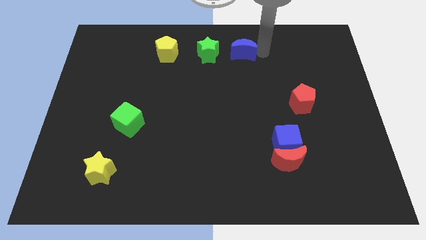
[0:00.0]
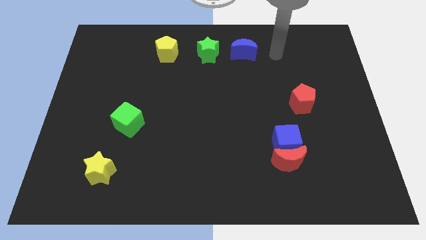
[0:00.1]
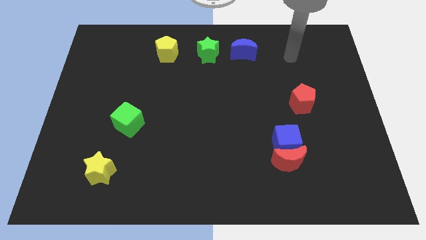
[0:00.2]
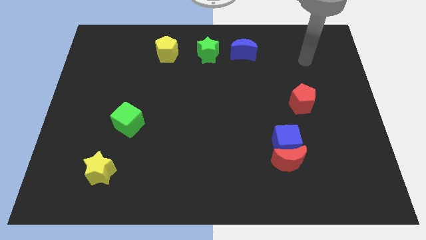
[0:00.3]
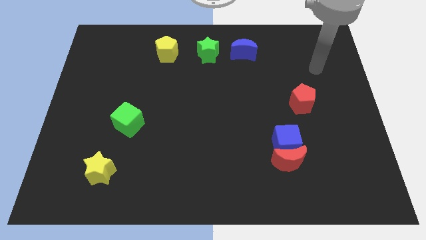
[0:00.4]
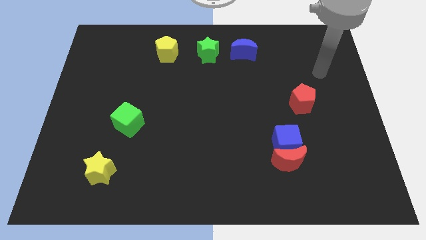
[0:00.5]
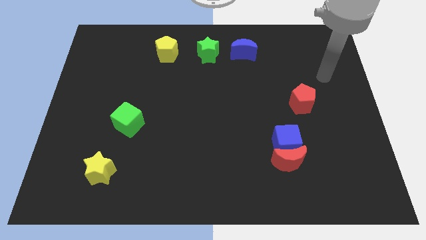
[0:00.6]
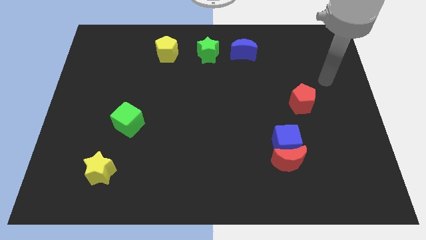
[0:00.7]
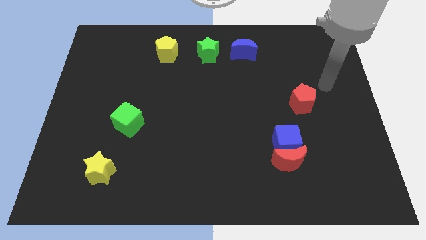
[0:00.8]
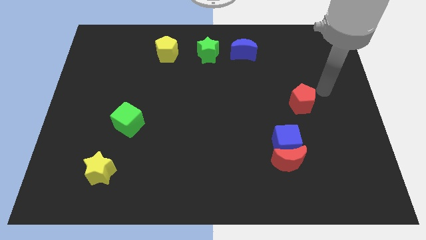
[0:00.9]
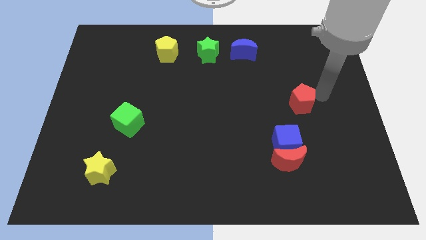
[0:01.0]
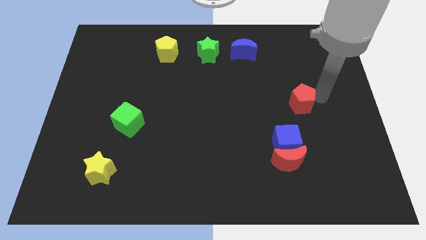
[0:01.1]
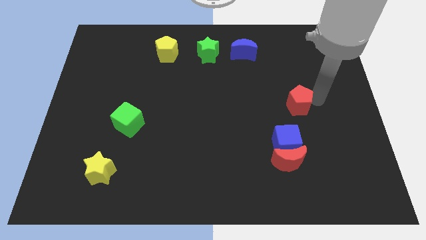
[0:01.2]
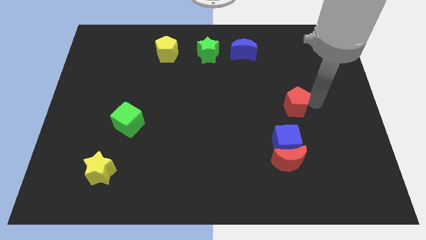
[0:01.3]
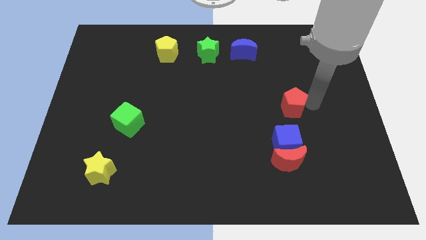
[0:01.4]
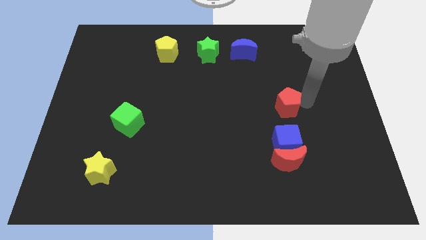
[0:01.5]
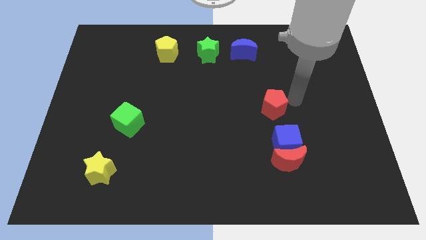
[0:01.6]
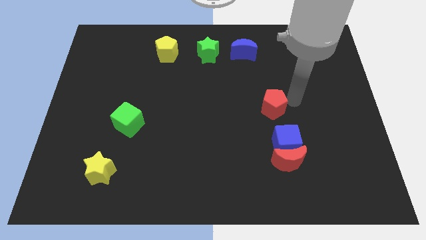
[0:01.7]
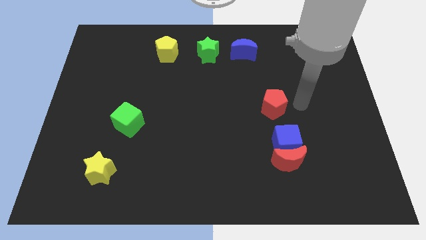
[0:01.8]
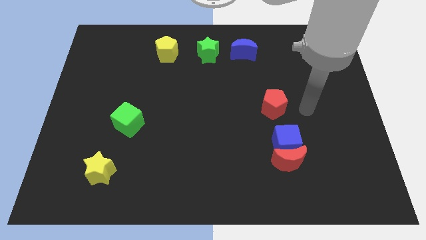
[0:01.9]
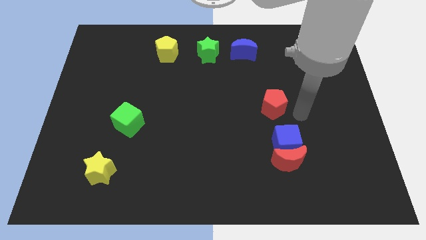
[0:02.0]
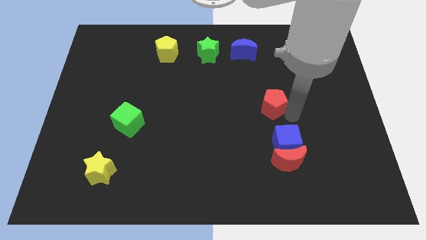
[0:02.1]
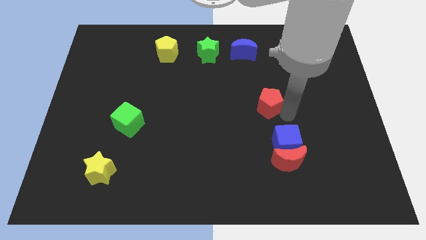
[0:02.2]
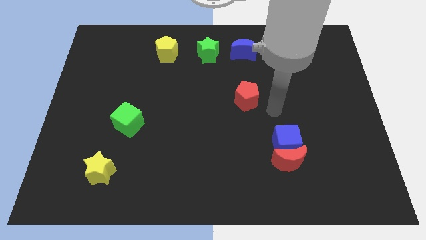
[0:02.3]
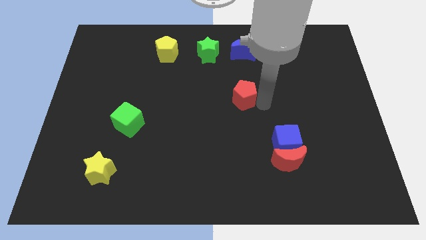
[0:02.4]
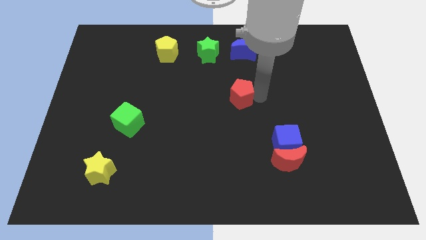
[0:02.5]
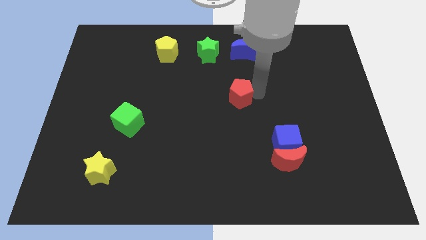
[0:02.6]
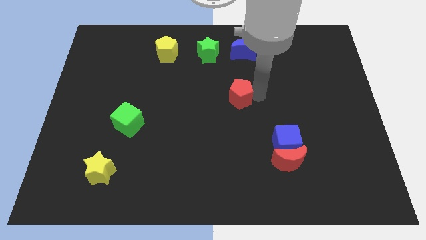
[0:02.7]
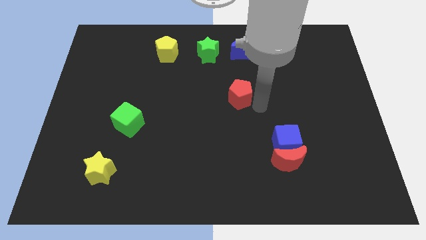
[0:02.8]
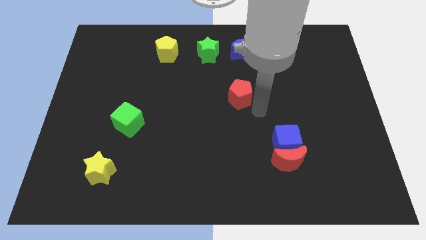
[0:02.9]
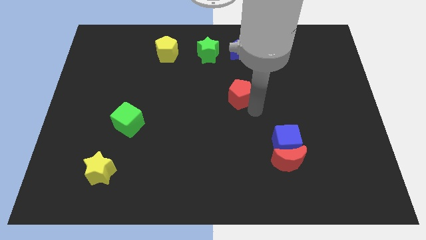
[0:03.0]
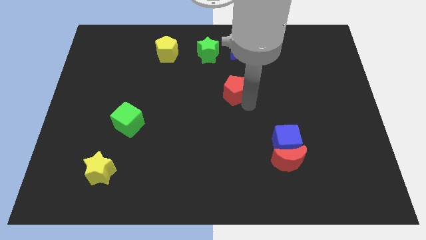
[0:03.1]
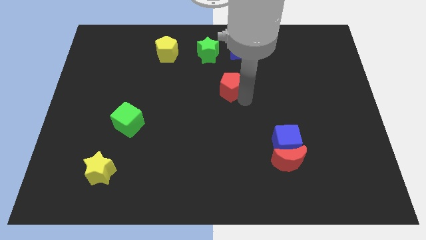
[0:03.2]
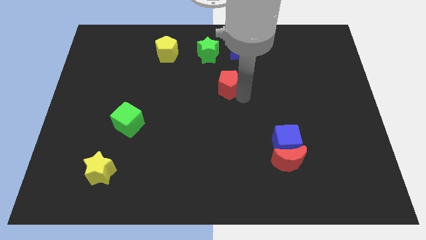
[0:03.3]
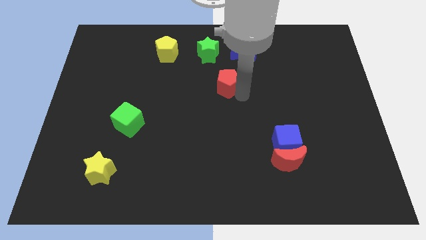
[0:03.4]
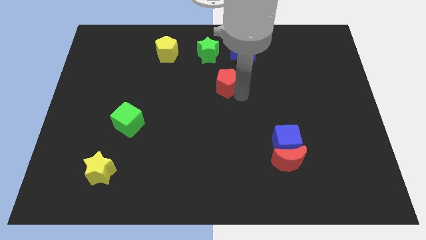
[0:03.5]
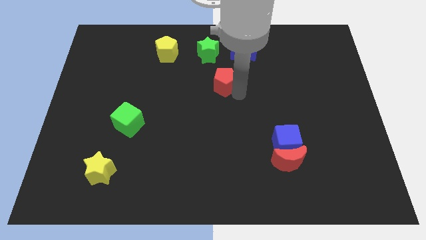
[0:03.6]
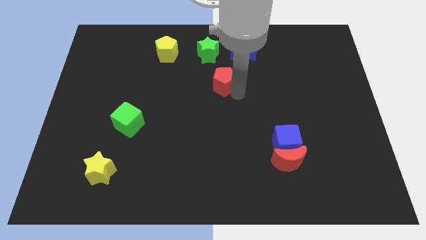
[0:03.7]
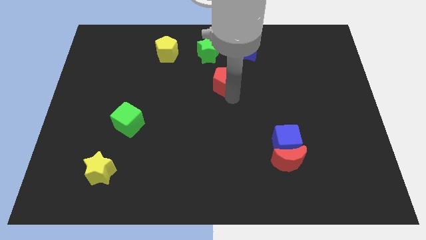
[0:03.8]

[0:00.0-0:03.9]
move the red pentagon towards green star

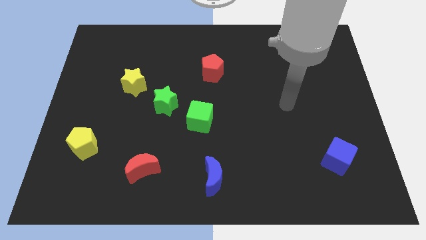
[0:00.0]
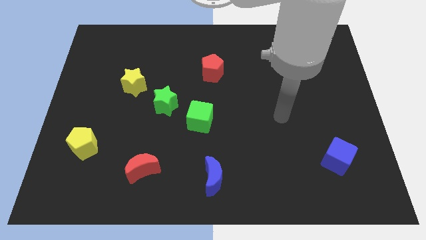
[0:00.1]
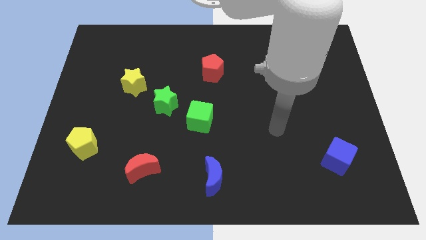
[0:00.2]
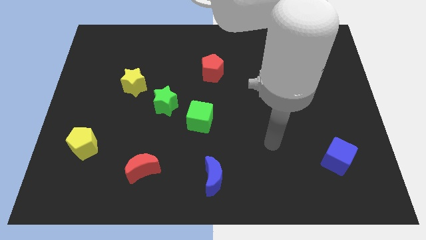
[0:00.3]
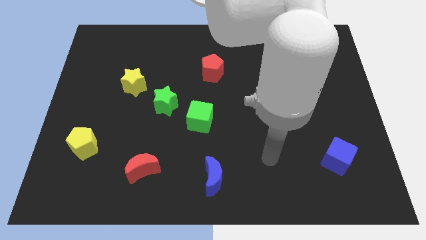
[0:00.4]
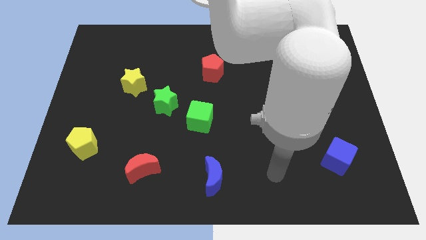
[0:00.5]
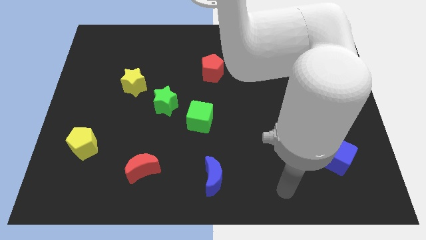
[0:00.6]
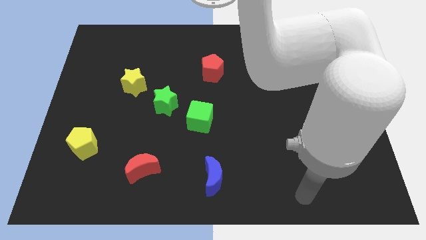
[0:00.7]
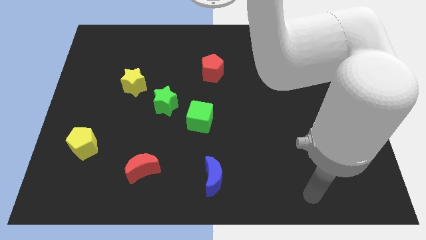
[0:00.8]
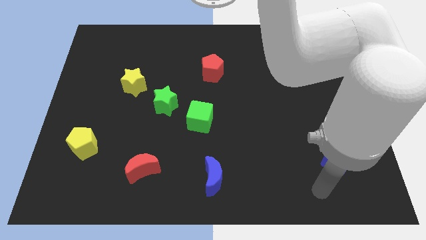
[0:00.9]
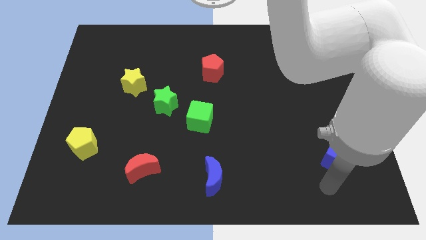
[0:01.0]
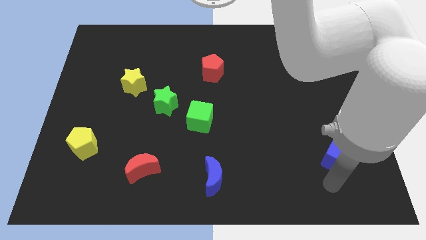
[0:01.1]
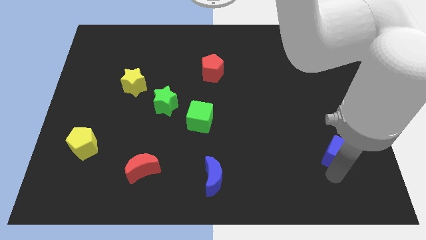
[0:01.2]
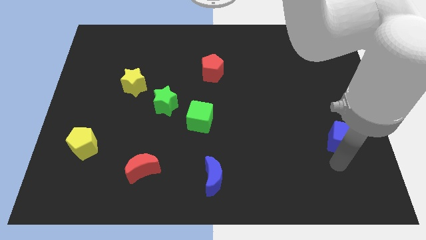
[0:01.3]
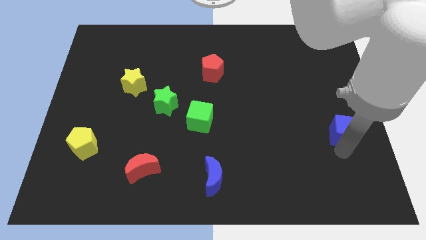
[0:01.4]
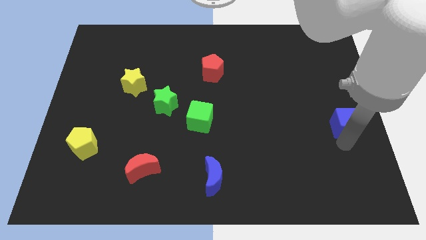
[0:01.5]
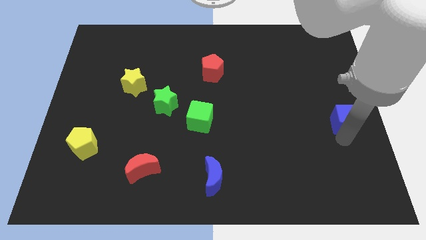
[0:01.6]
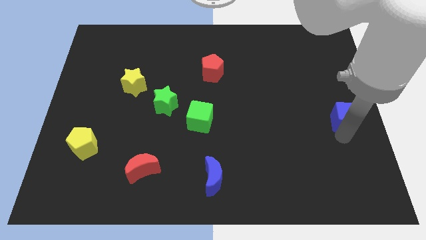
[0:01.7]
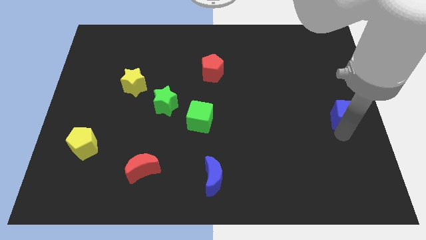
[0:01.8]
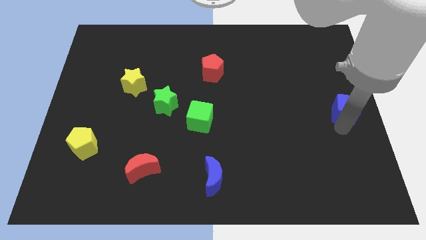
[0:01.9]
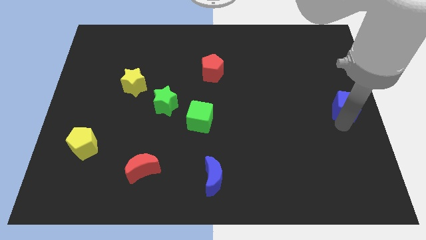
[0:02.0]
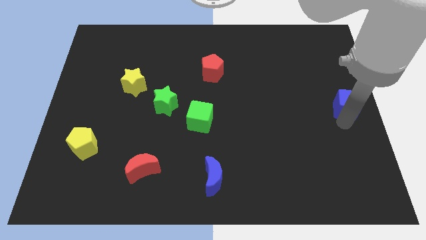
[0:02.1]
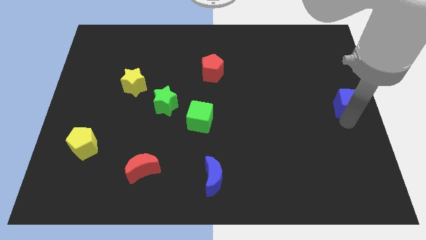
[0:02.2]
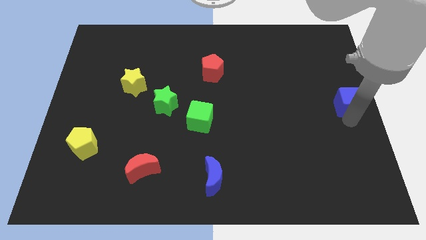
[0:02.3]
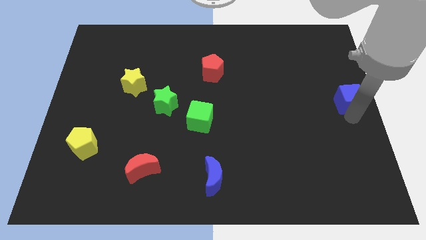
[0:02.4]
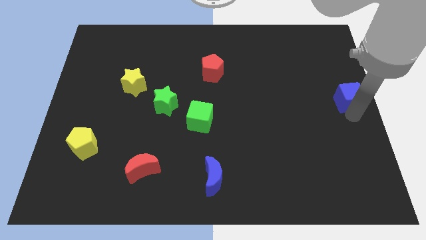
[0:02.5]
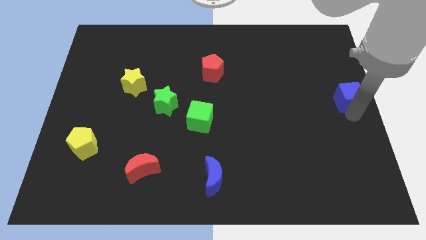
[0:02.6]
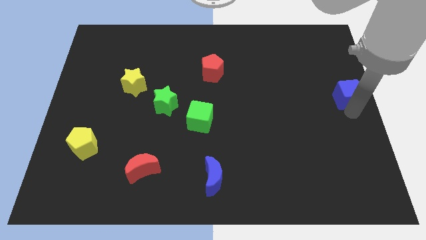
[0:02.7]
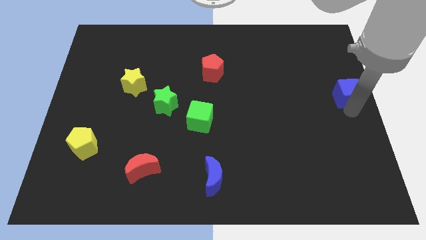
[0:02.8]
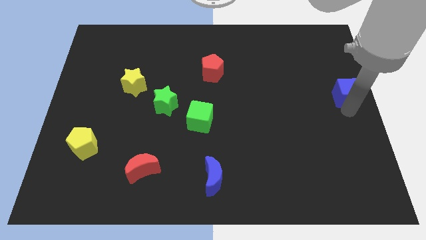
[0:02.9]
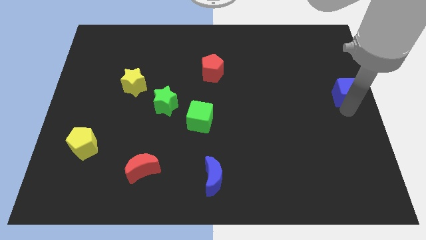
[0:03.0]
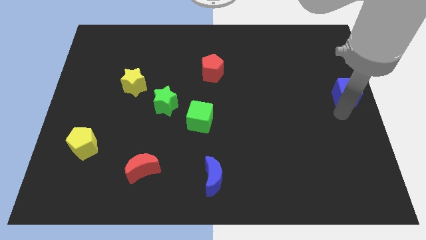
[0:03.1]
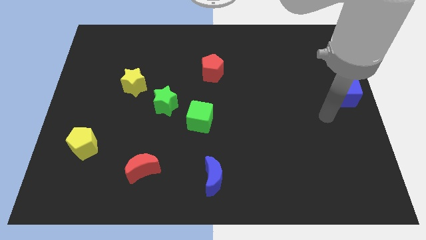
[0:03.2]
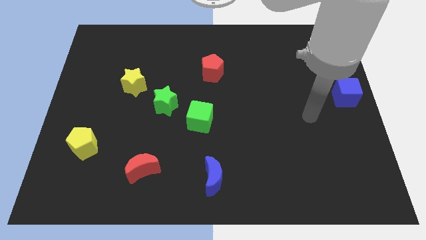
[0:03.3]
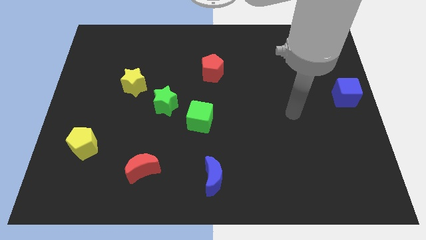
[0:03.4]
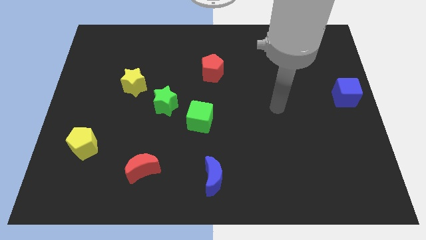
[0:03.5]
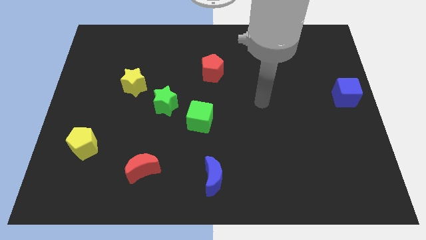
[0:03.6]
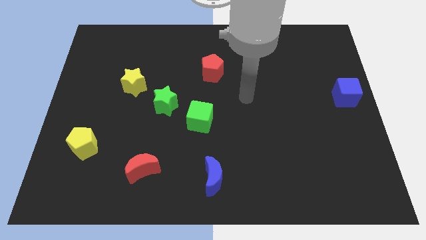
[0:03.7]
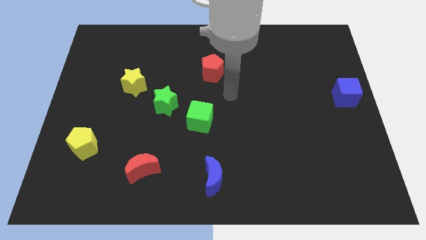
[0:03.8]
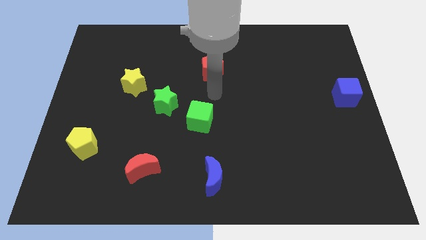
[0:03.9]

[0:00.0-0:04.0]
slide the blue cube to the right center

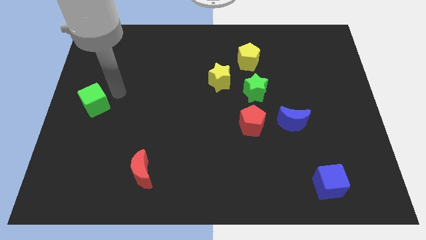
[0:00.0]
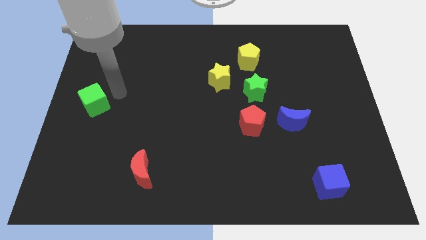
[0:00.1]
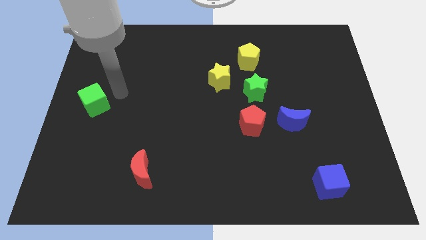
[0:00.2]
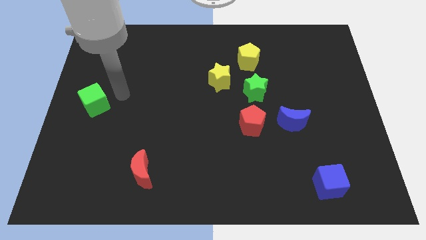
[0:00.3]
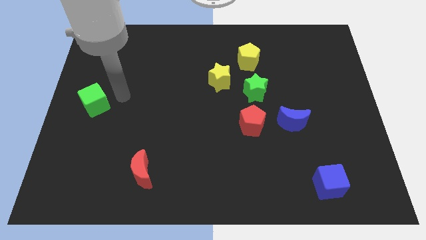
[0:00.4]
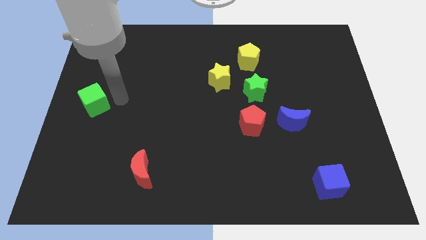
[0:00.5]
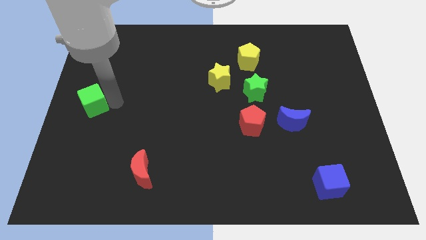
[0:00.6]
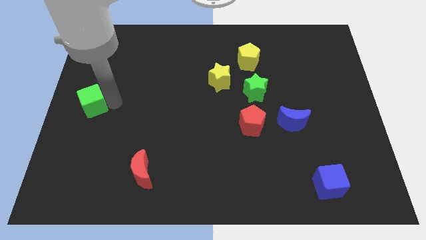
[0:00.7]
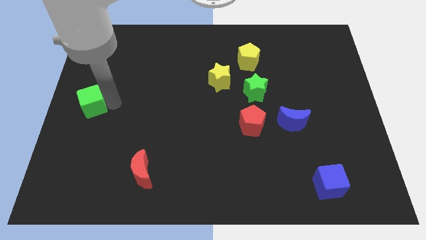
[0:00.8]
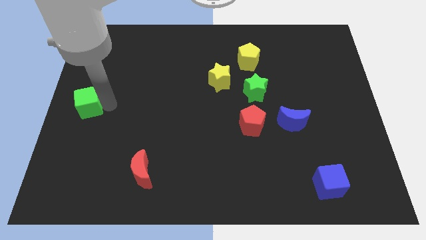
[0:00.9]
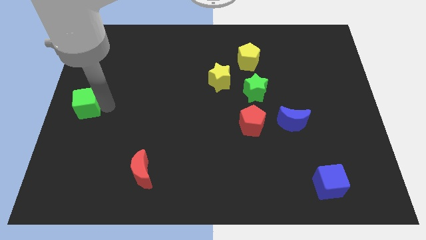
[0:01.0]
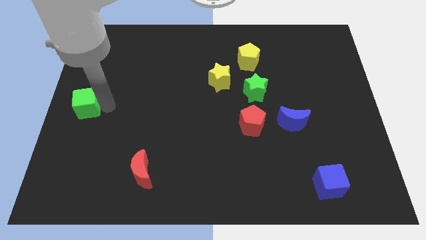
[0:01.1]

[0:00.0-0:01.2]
slide the green cube towards the center left side of the board
